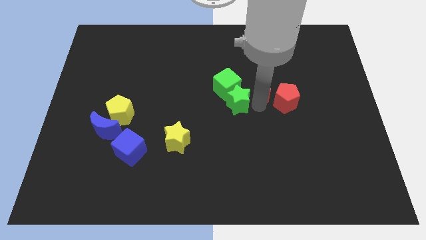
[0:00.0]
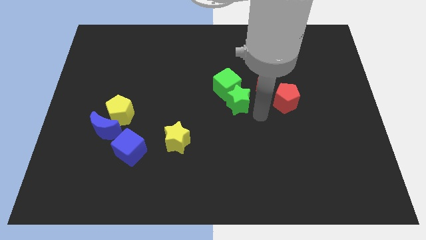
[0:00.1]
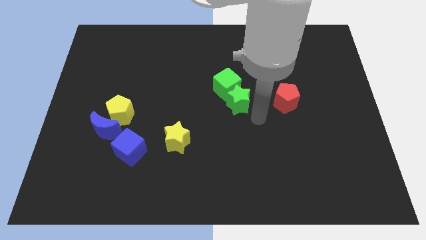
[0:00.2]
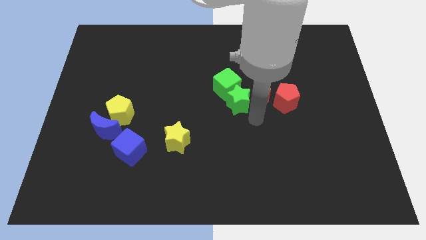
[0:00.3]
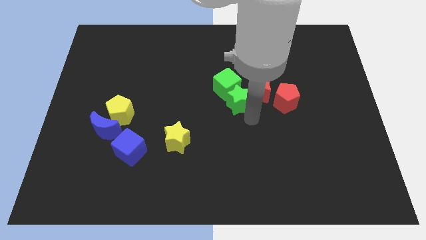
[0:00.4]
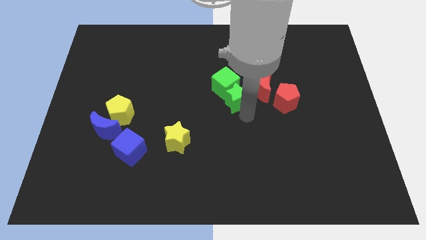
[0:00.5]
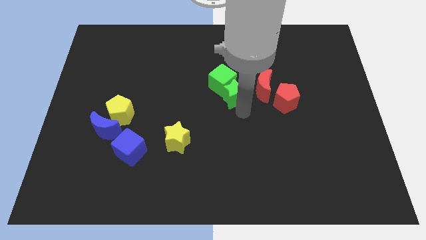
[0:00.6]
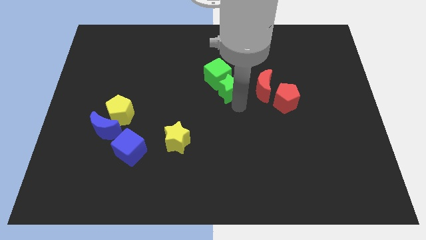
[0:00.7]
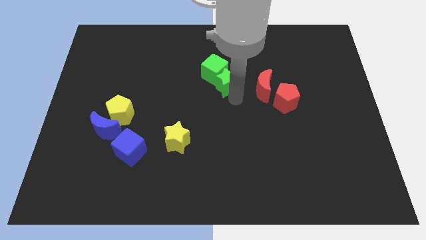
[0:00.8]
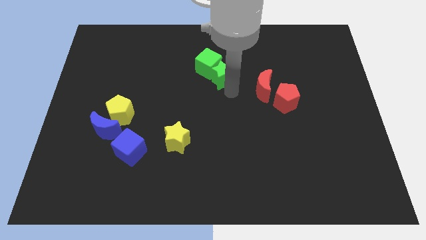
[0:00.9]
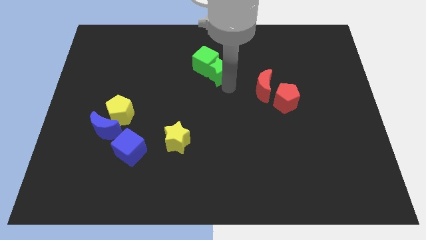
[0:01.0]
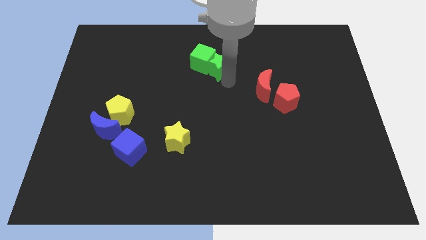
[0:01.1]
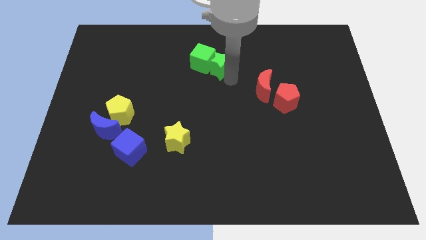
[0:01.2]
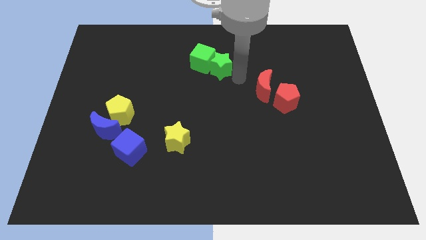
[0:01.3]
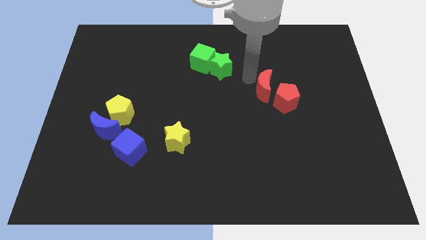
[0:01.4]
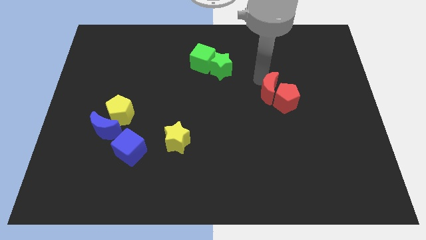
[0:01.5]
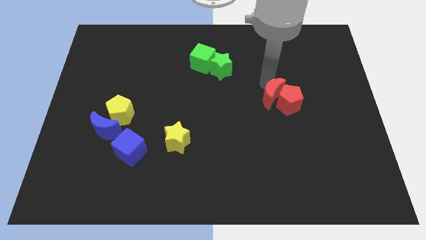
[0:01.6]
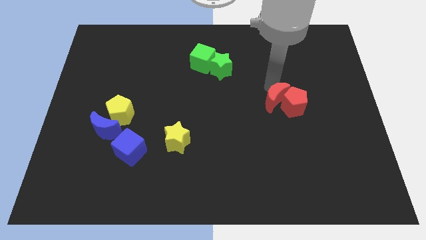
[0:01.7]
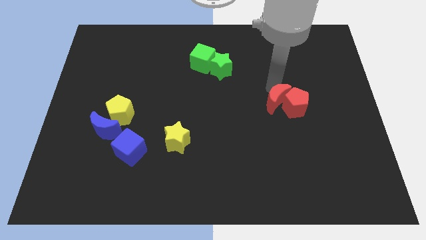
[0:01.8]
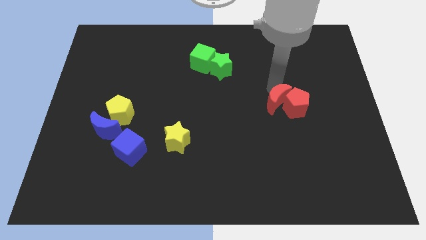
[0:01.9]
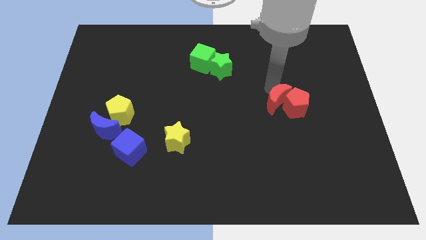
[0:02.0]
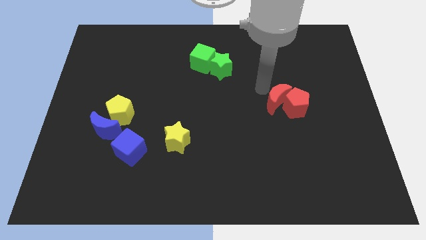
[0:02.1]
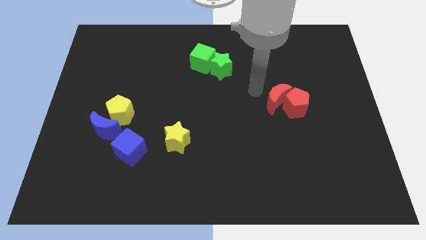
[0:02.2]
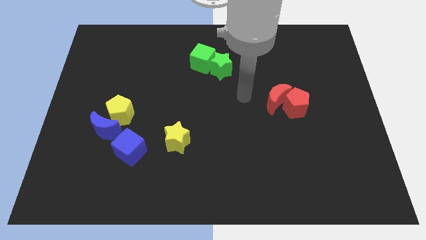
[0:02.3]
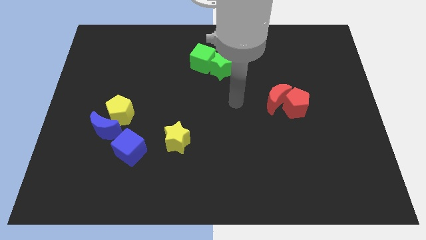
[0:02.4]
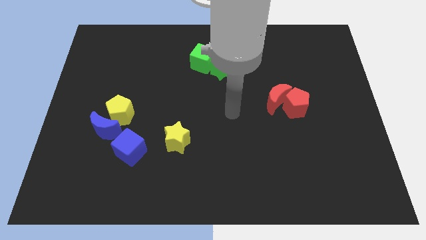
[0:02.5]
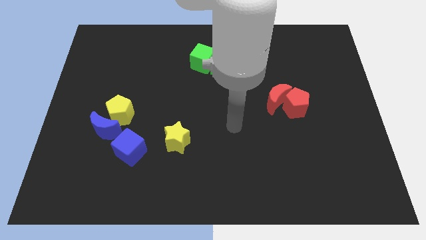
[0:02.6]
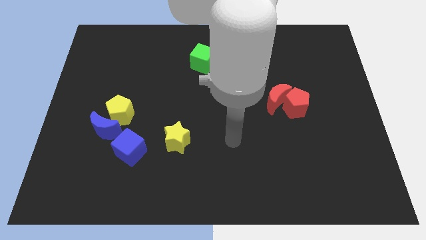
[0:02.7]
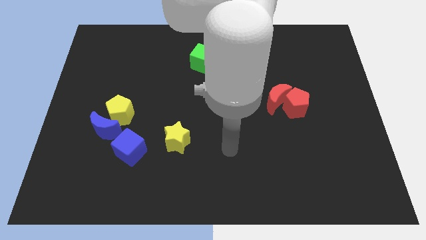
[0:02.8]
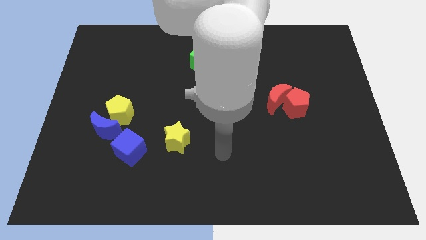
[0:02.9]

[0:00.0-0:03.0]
put green and red blocks diagonally

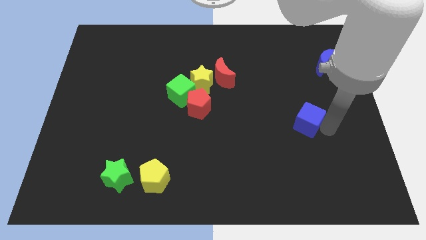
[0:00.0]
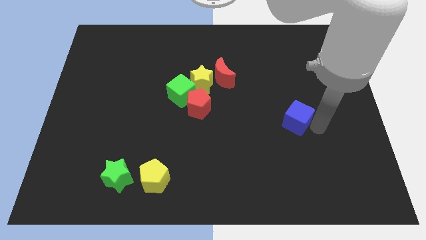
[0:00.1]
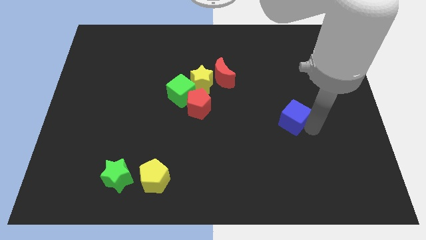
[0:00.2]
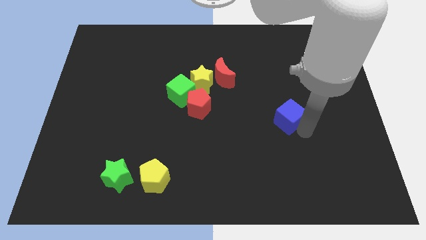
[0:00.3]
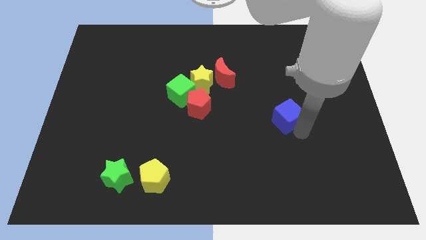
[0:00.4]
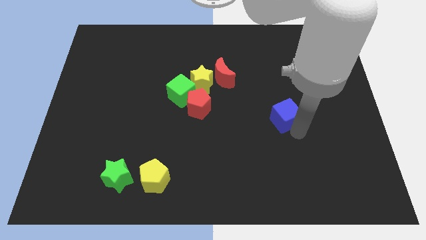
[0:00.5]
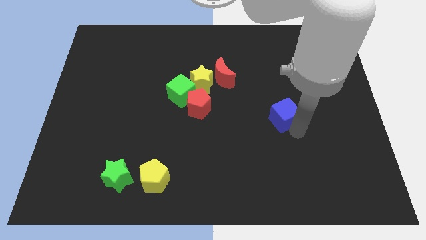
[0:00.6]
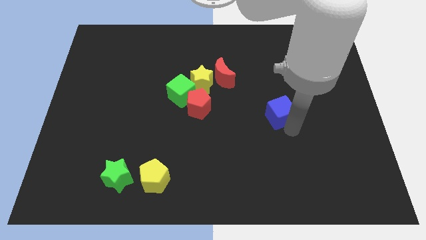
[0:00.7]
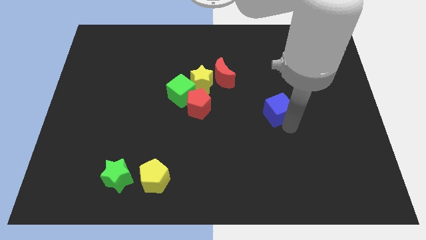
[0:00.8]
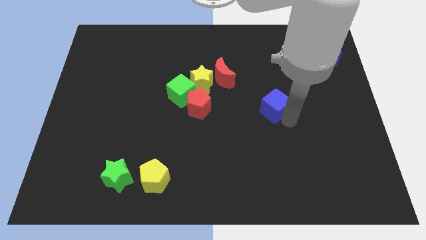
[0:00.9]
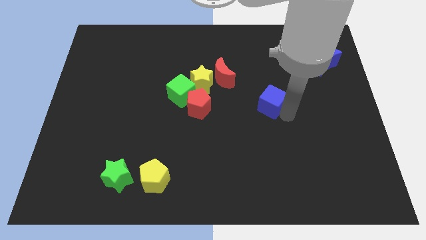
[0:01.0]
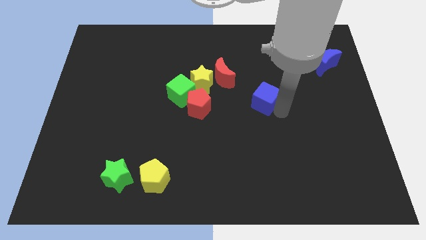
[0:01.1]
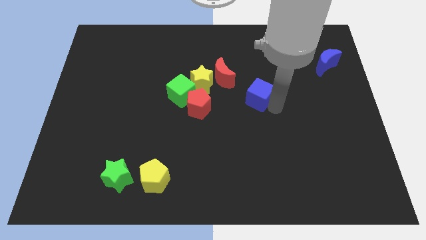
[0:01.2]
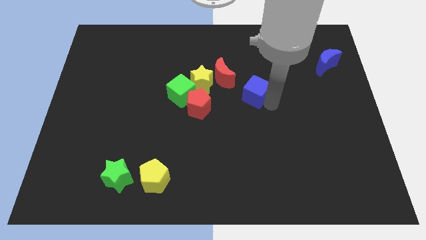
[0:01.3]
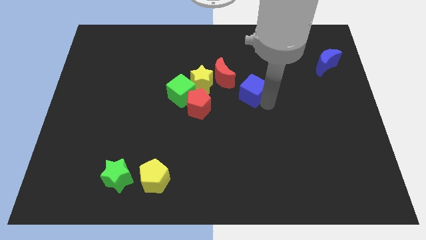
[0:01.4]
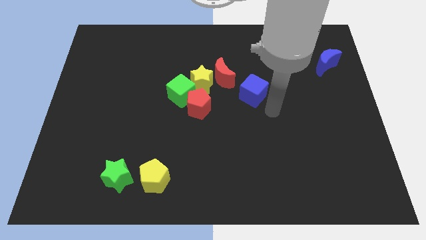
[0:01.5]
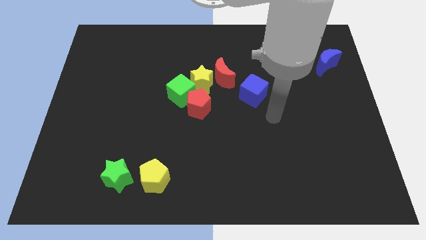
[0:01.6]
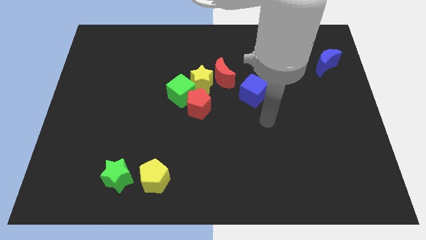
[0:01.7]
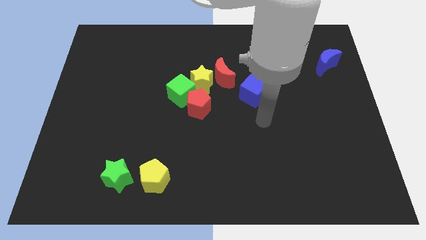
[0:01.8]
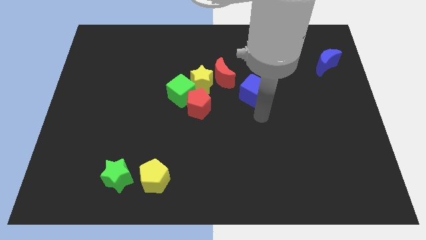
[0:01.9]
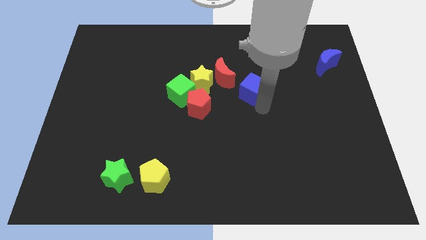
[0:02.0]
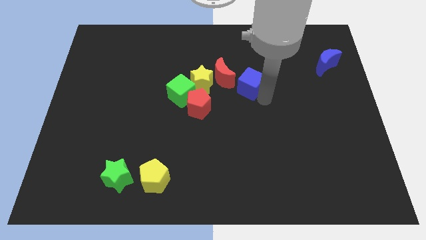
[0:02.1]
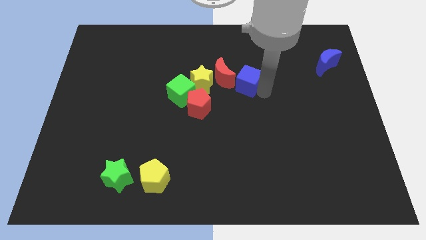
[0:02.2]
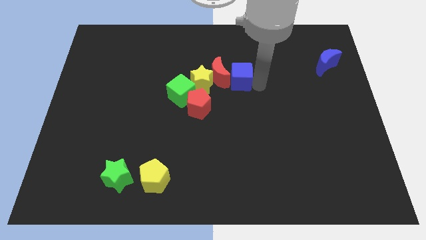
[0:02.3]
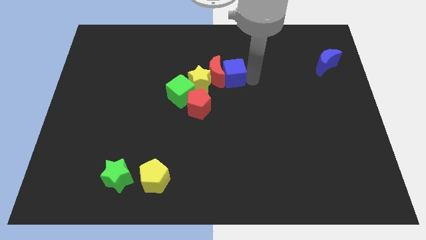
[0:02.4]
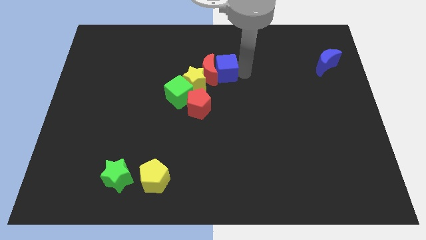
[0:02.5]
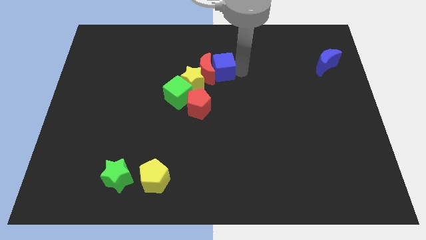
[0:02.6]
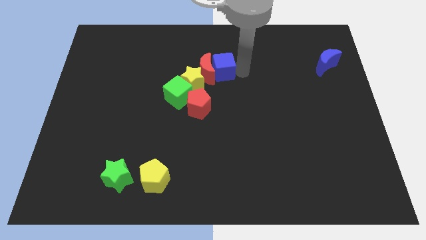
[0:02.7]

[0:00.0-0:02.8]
place the blue cube right to the red moon

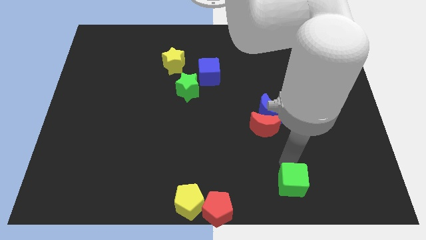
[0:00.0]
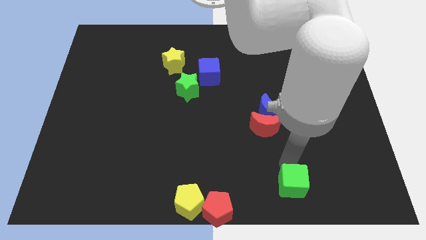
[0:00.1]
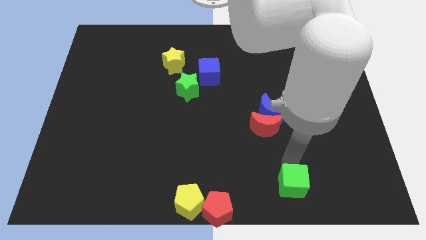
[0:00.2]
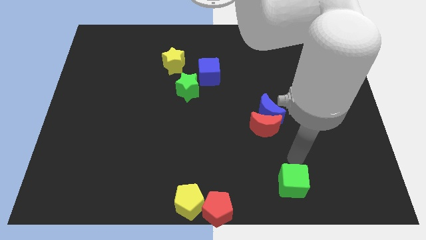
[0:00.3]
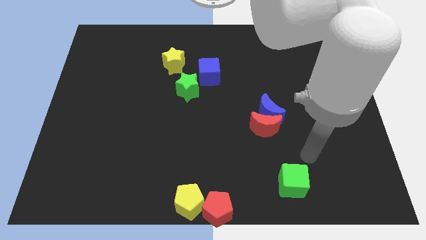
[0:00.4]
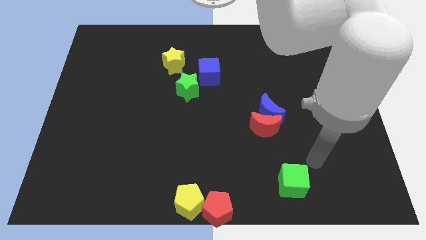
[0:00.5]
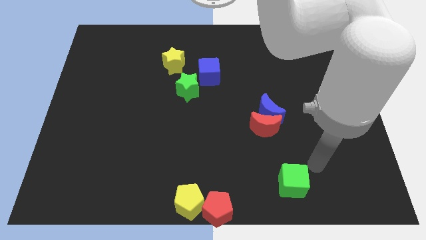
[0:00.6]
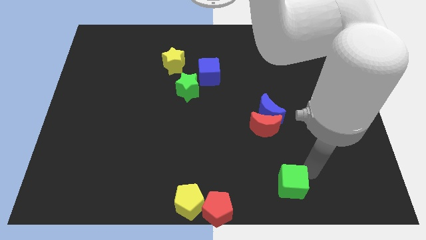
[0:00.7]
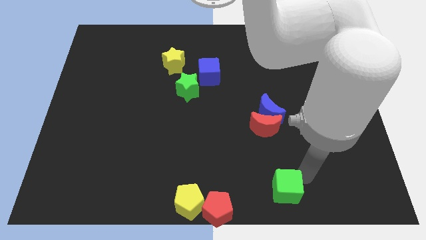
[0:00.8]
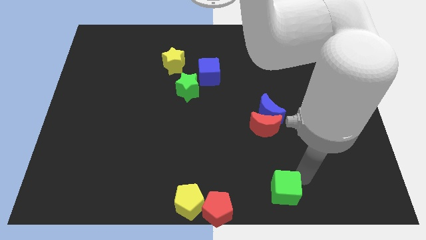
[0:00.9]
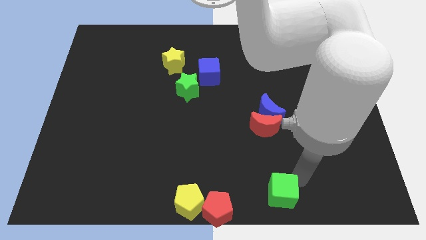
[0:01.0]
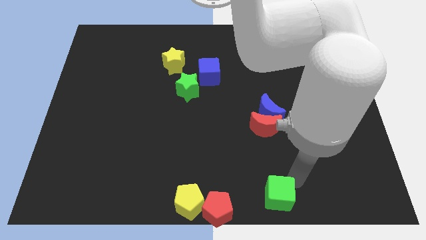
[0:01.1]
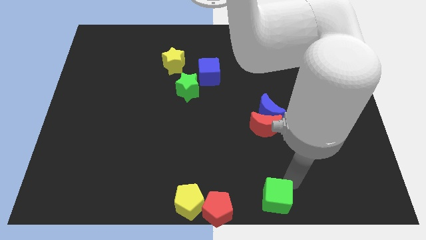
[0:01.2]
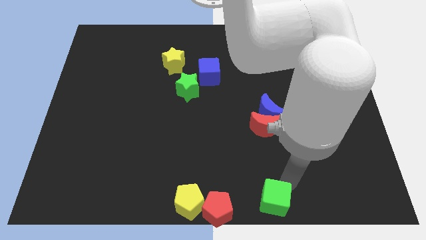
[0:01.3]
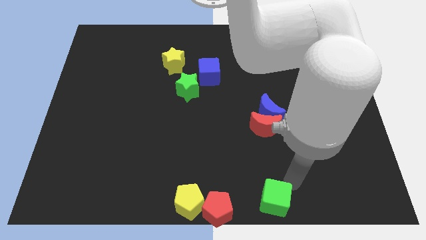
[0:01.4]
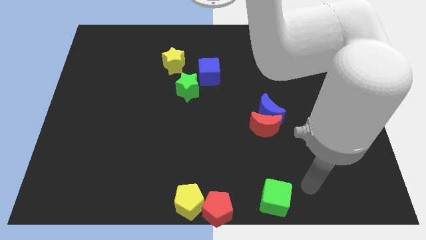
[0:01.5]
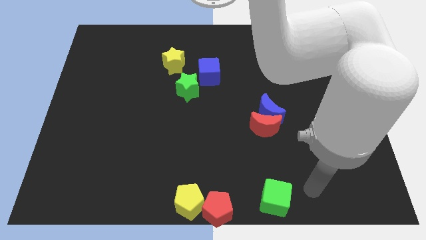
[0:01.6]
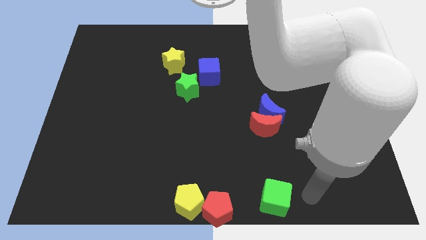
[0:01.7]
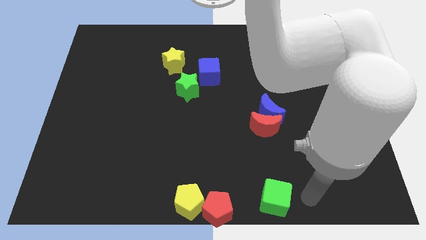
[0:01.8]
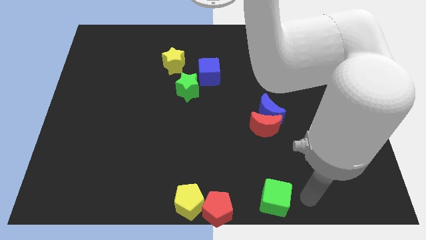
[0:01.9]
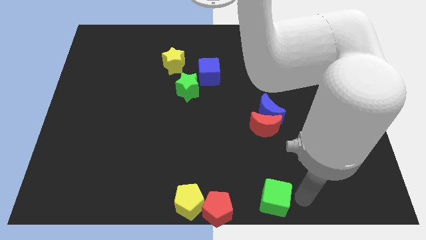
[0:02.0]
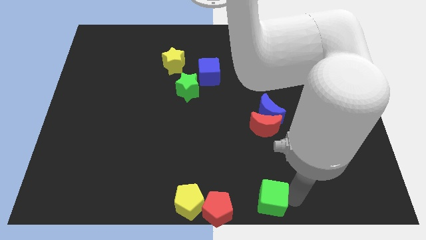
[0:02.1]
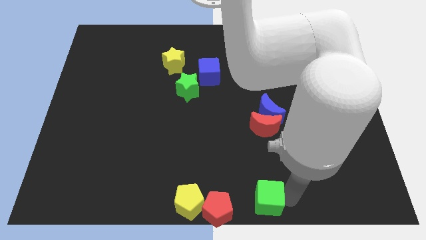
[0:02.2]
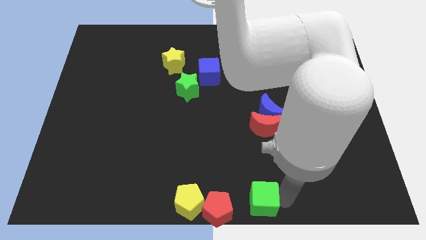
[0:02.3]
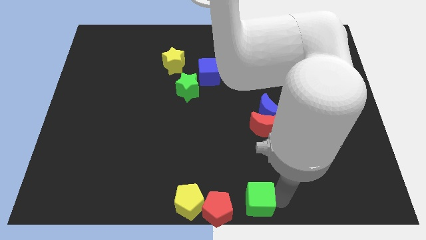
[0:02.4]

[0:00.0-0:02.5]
place the green cube to the right of the red pentagon

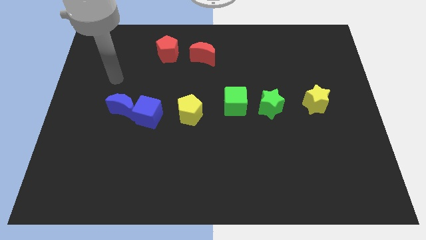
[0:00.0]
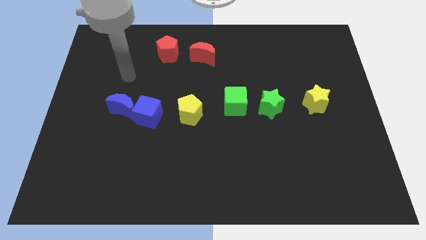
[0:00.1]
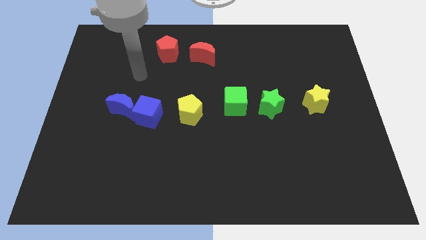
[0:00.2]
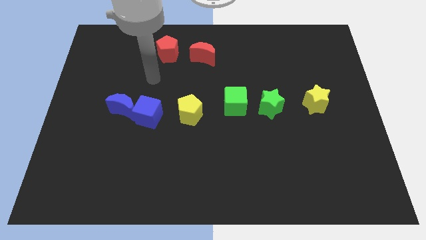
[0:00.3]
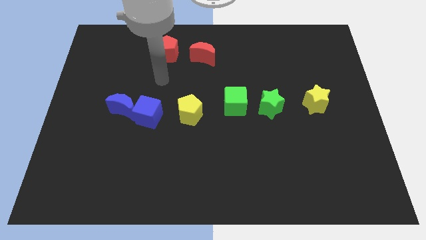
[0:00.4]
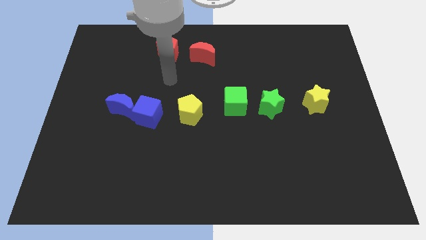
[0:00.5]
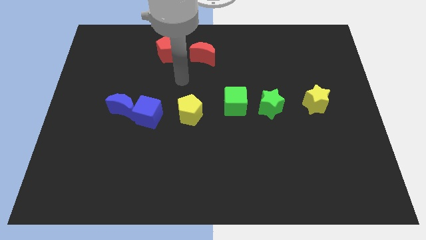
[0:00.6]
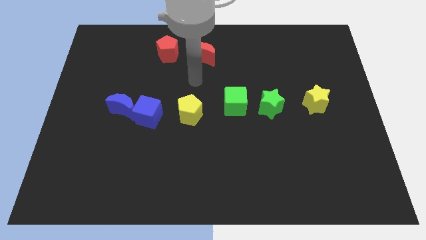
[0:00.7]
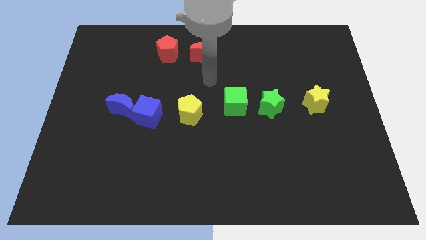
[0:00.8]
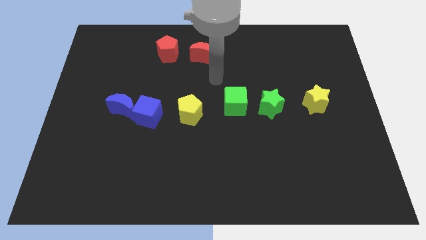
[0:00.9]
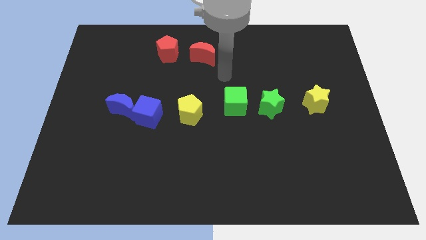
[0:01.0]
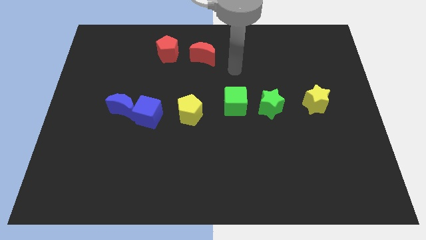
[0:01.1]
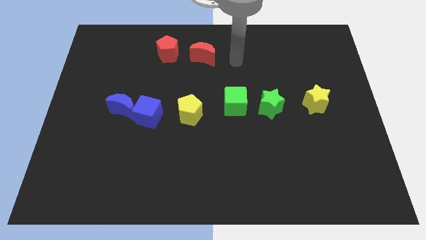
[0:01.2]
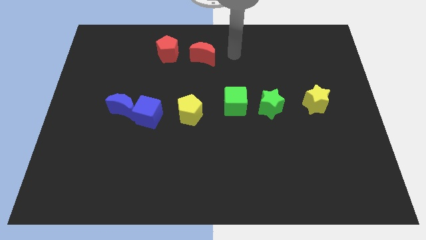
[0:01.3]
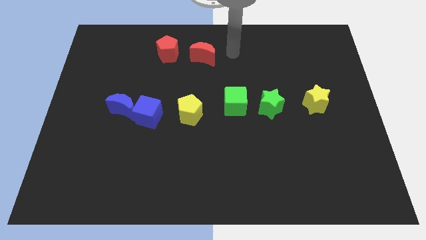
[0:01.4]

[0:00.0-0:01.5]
move your hand away from the blue crescent
